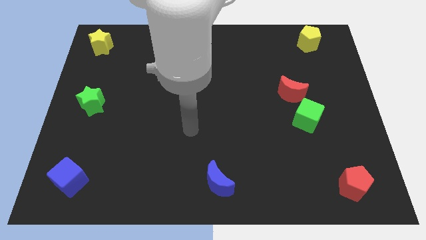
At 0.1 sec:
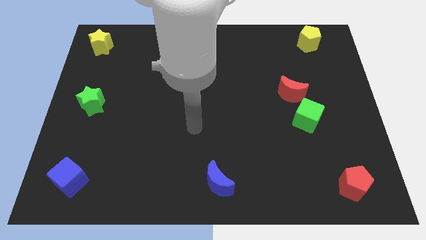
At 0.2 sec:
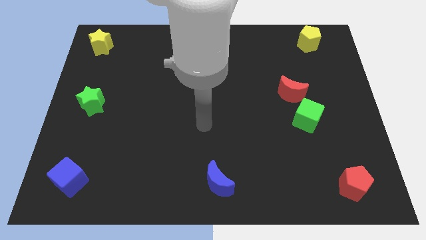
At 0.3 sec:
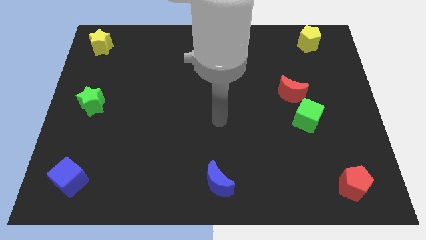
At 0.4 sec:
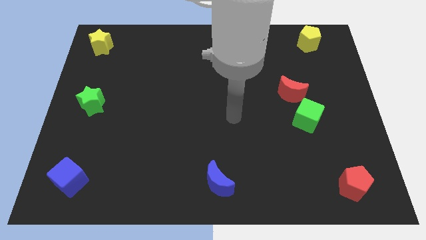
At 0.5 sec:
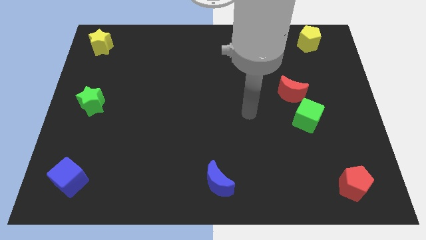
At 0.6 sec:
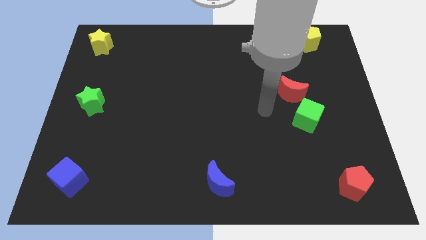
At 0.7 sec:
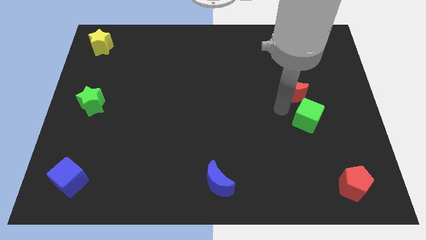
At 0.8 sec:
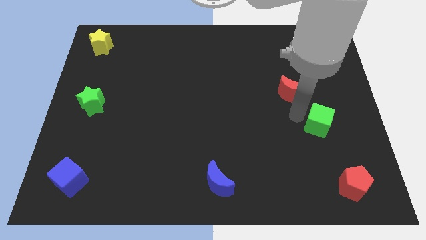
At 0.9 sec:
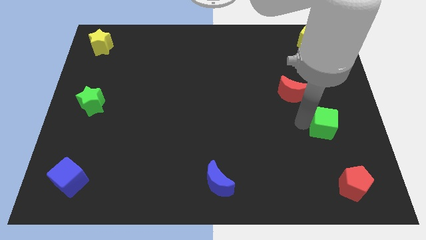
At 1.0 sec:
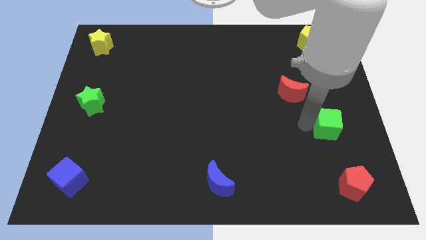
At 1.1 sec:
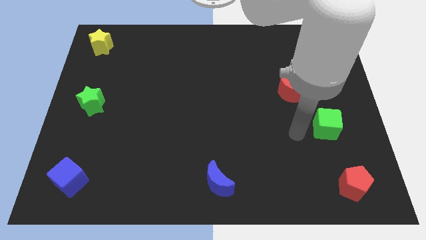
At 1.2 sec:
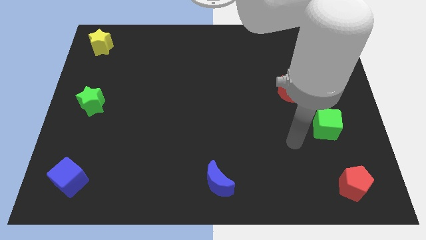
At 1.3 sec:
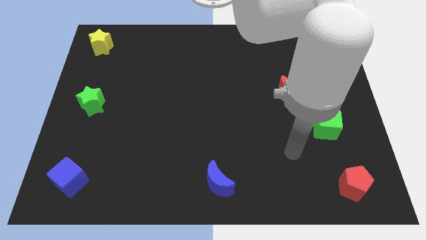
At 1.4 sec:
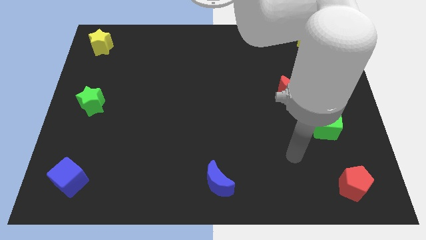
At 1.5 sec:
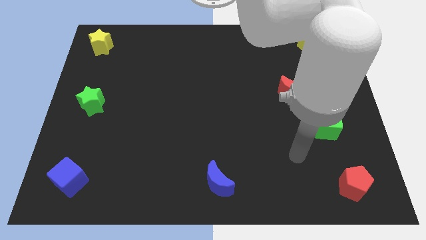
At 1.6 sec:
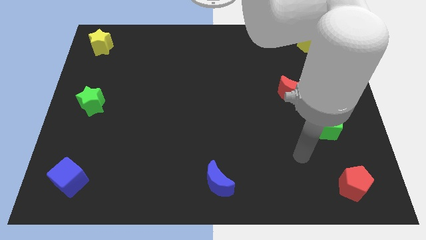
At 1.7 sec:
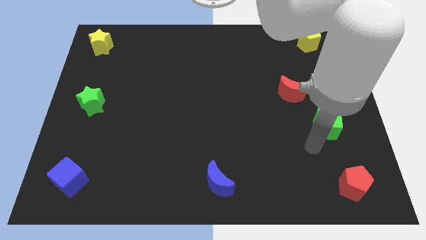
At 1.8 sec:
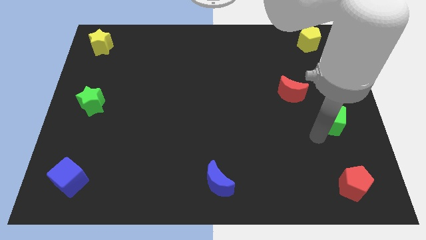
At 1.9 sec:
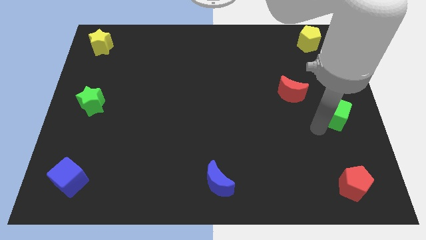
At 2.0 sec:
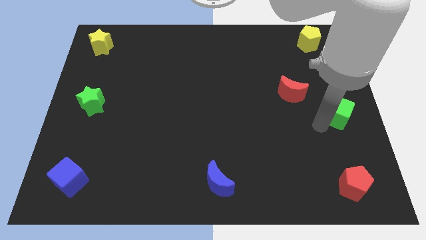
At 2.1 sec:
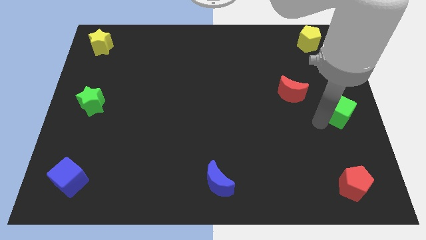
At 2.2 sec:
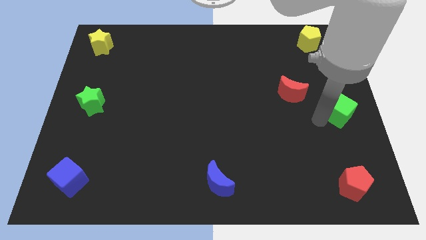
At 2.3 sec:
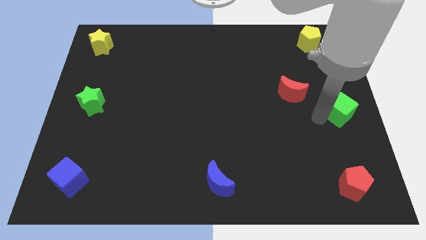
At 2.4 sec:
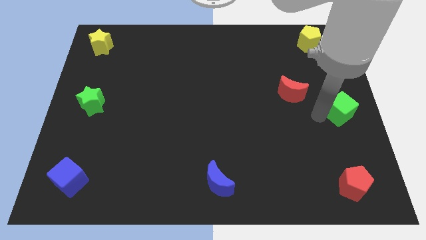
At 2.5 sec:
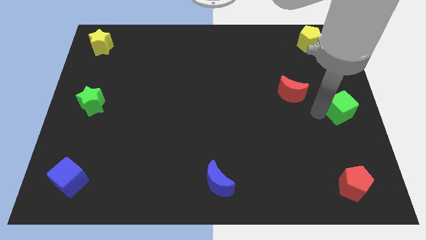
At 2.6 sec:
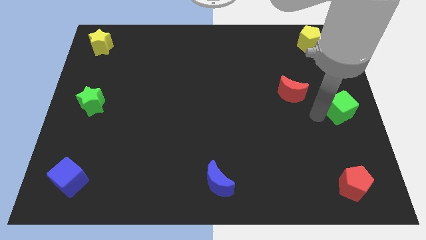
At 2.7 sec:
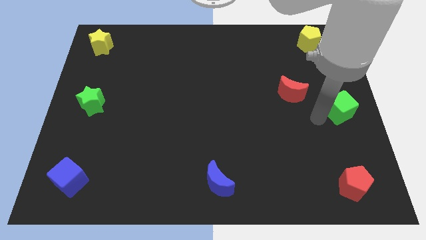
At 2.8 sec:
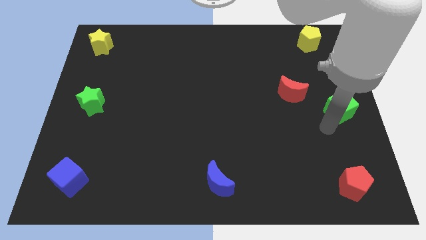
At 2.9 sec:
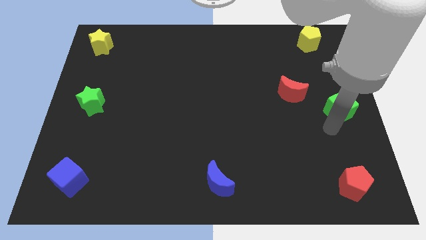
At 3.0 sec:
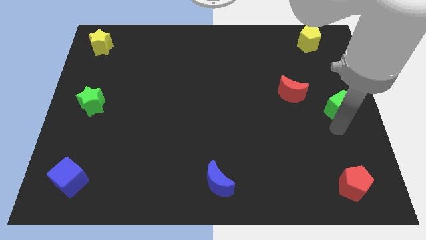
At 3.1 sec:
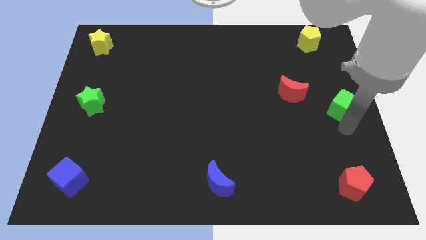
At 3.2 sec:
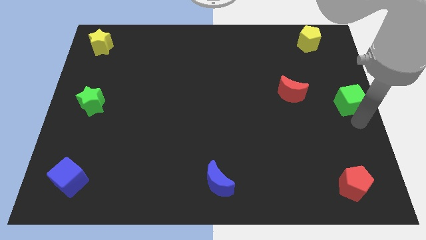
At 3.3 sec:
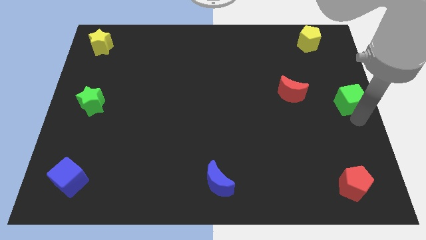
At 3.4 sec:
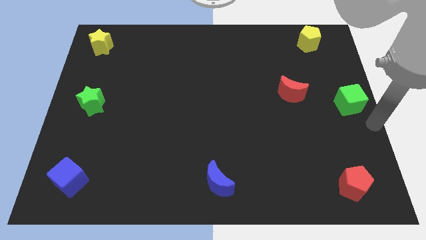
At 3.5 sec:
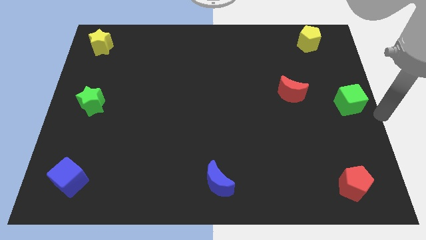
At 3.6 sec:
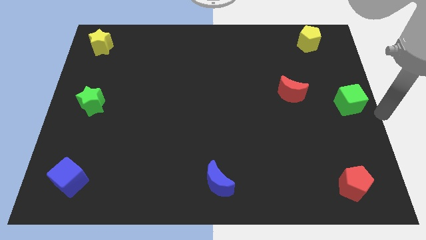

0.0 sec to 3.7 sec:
push the green cube away from the red crescent

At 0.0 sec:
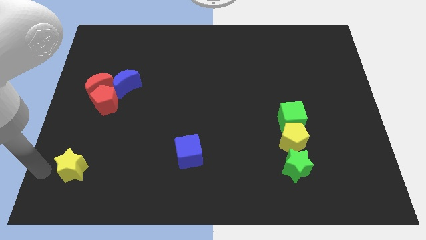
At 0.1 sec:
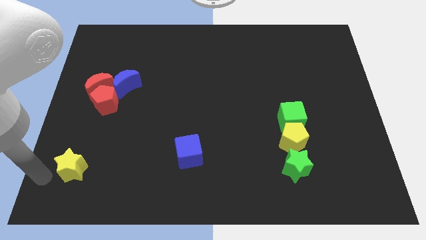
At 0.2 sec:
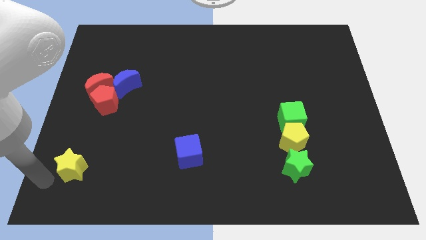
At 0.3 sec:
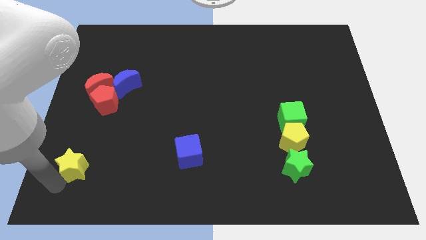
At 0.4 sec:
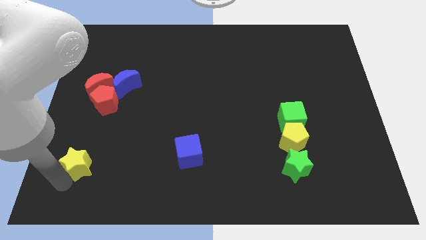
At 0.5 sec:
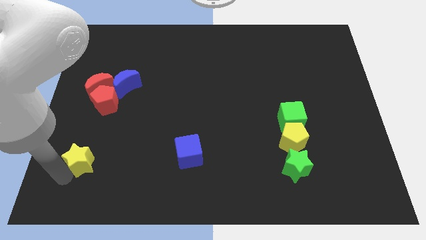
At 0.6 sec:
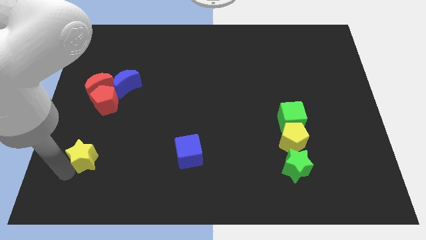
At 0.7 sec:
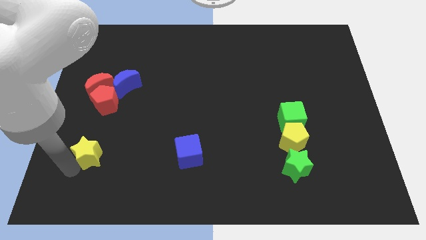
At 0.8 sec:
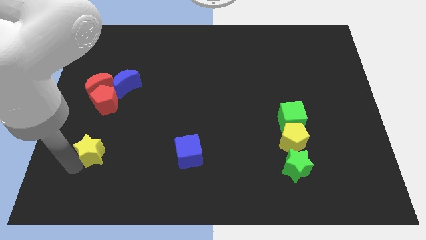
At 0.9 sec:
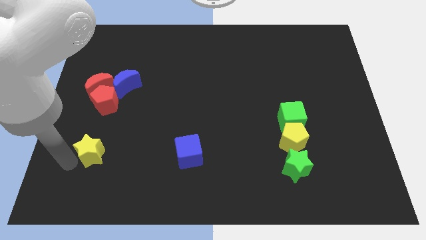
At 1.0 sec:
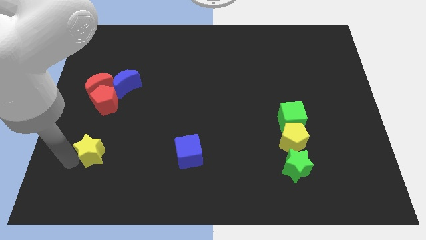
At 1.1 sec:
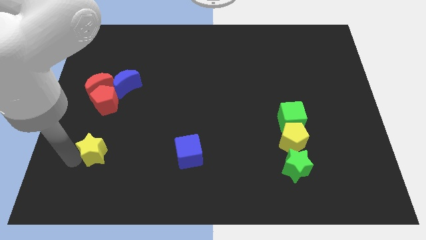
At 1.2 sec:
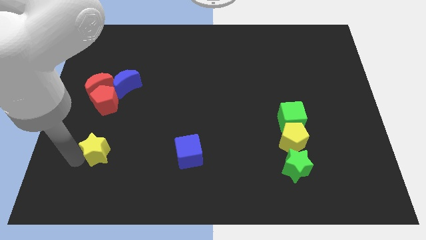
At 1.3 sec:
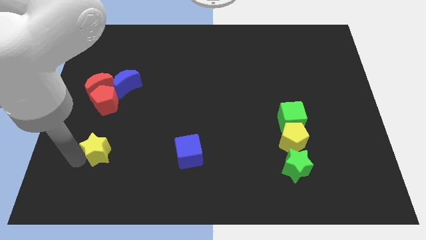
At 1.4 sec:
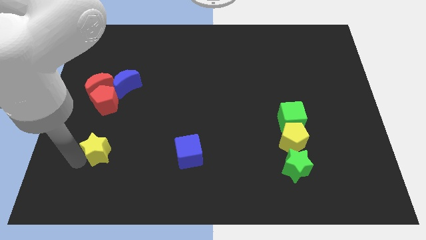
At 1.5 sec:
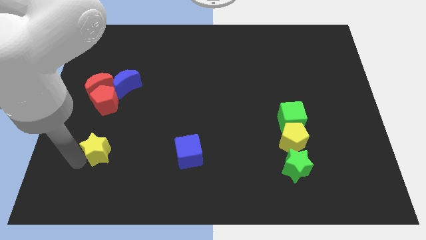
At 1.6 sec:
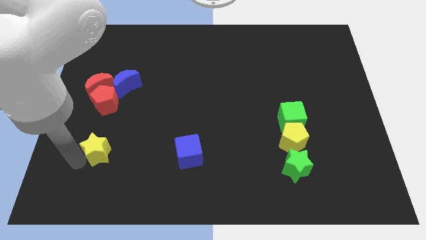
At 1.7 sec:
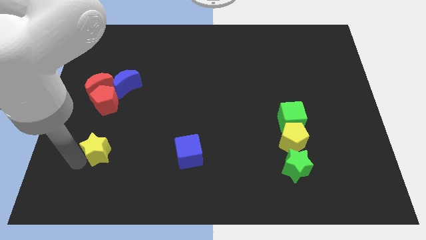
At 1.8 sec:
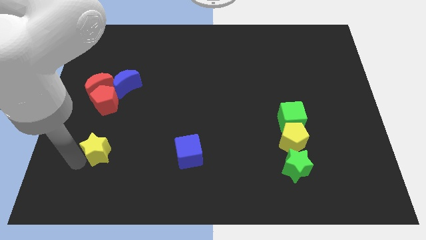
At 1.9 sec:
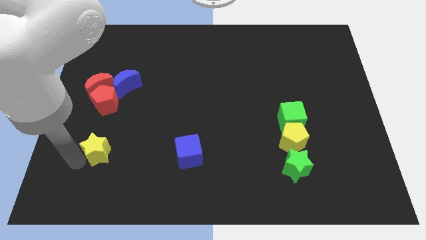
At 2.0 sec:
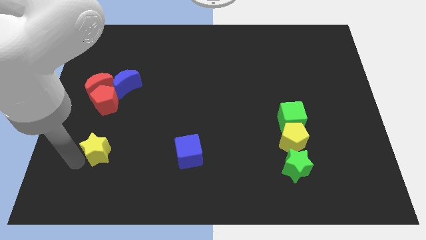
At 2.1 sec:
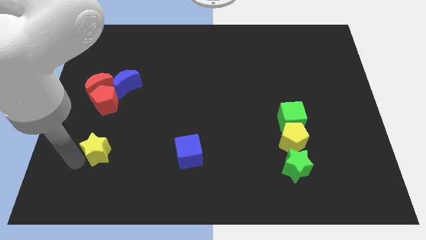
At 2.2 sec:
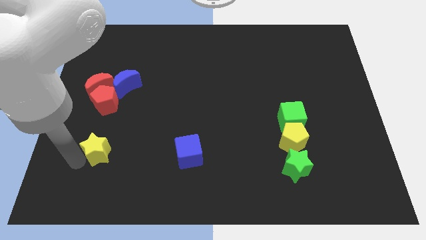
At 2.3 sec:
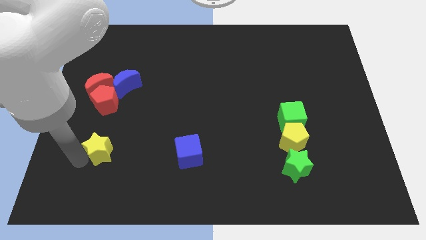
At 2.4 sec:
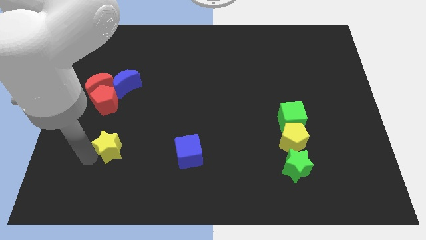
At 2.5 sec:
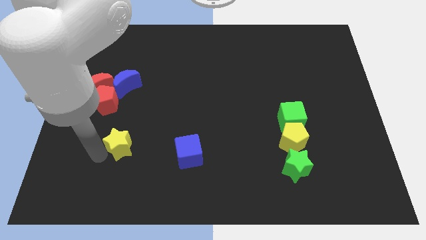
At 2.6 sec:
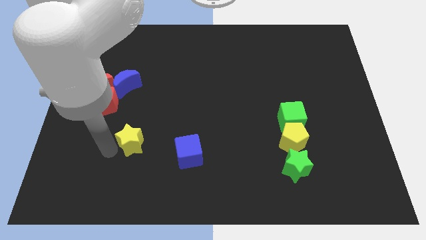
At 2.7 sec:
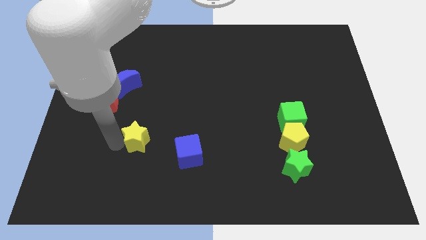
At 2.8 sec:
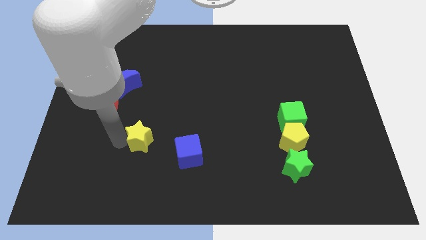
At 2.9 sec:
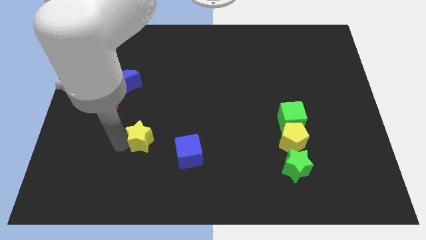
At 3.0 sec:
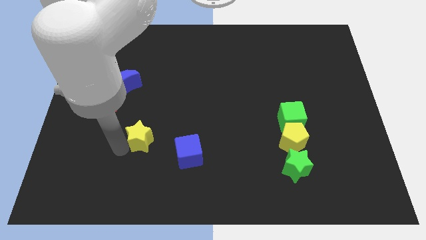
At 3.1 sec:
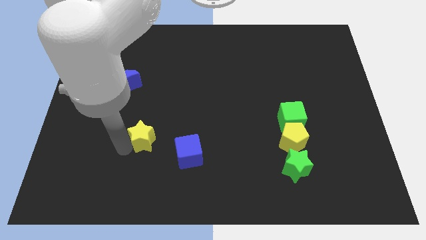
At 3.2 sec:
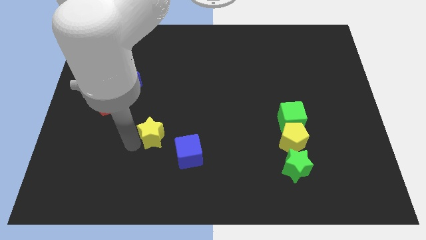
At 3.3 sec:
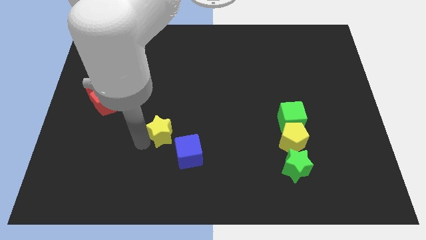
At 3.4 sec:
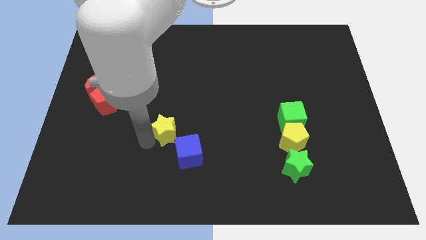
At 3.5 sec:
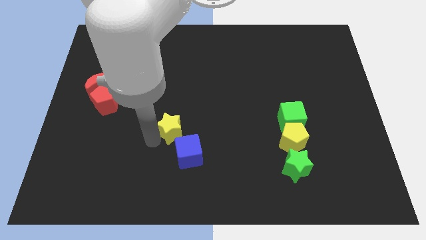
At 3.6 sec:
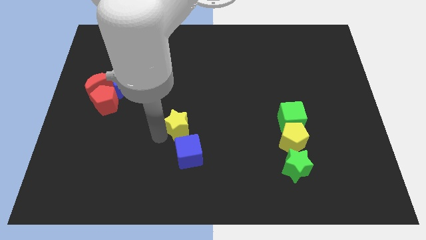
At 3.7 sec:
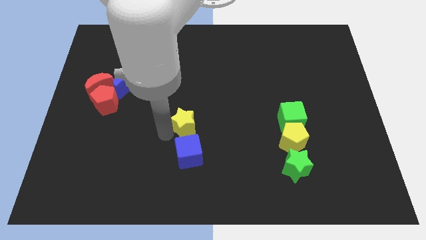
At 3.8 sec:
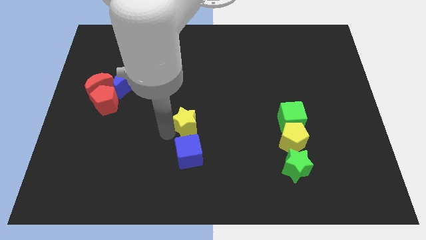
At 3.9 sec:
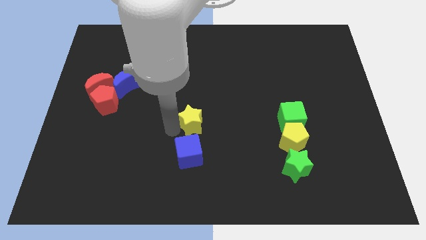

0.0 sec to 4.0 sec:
move the yellow star towards the blue cube

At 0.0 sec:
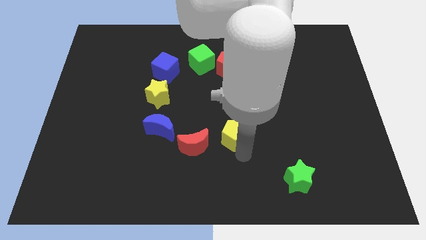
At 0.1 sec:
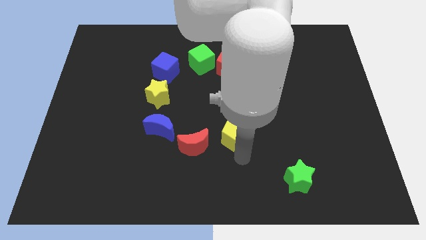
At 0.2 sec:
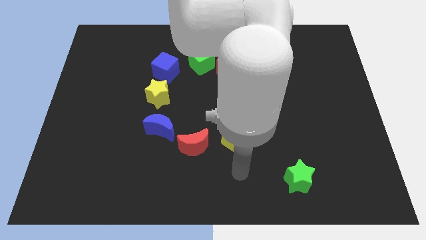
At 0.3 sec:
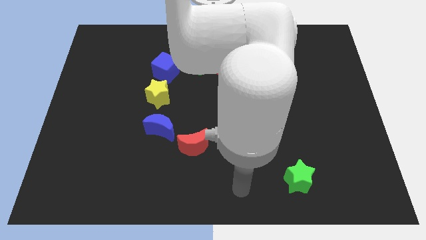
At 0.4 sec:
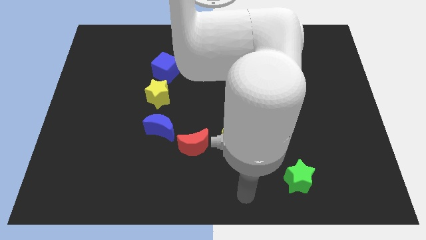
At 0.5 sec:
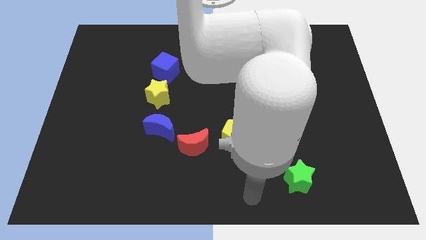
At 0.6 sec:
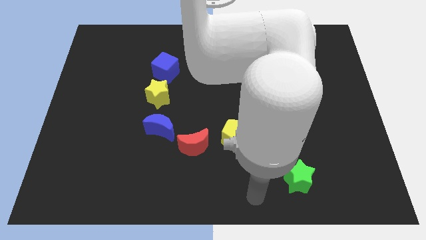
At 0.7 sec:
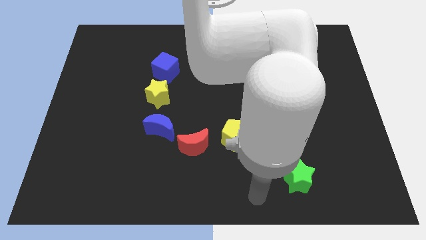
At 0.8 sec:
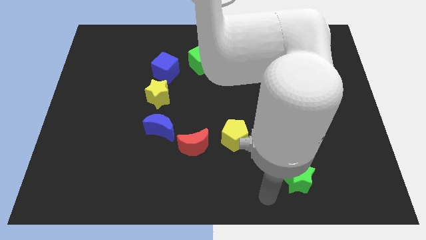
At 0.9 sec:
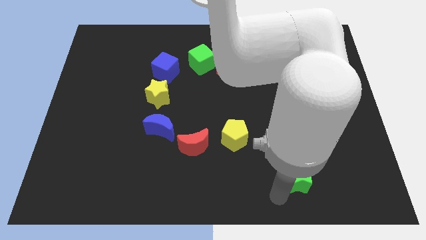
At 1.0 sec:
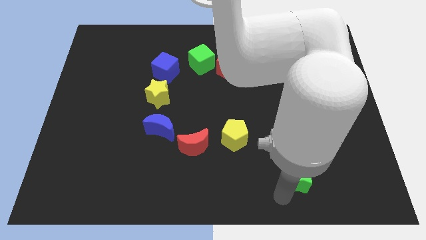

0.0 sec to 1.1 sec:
move the arm towards the left bottom of the green star

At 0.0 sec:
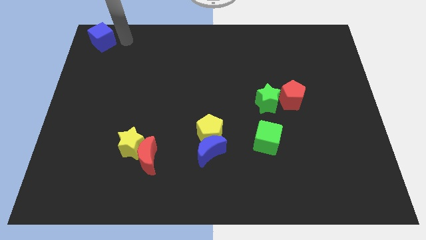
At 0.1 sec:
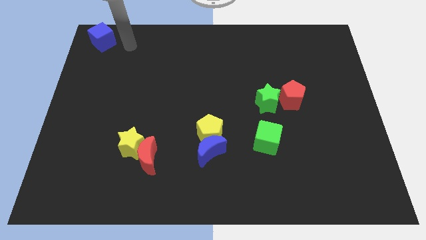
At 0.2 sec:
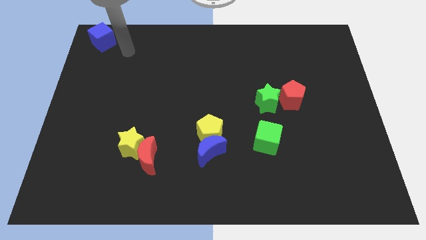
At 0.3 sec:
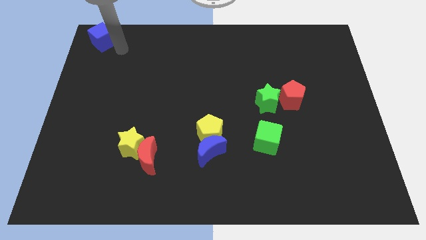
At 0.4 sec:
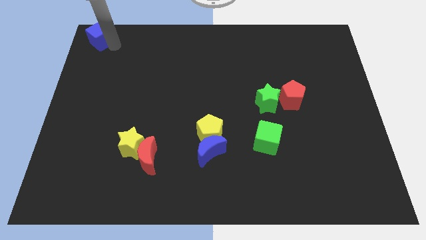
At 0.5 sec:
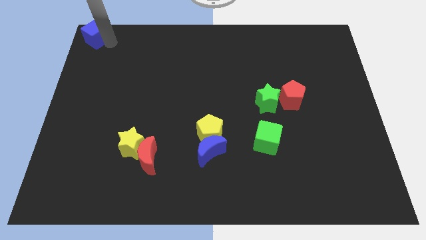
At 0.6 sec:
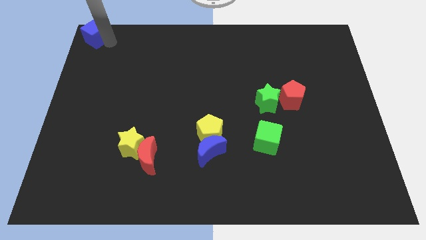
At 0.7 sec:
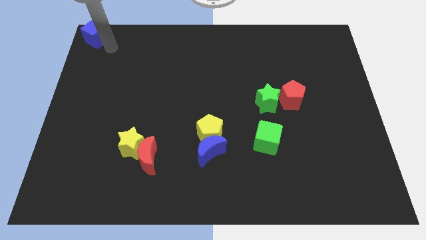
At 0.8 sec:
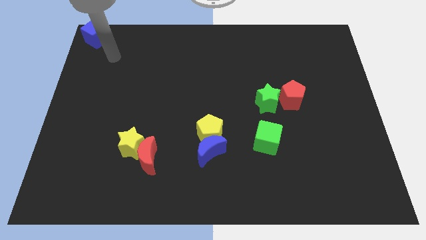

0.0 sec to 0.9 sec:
push the blue cube to the top left corner of the board
